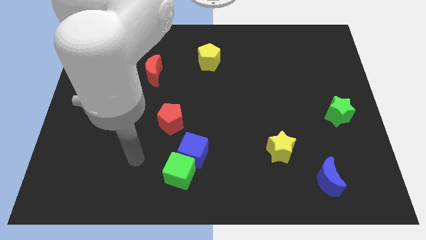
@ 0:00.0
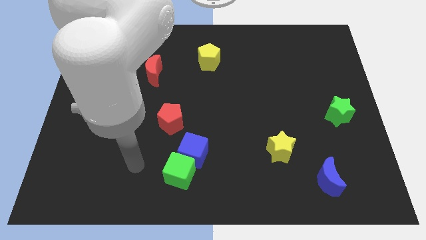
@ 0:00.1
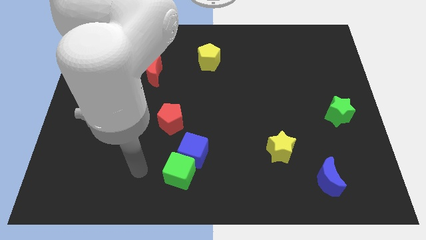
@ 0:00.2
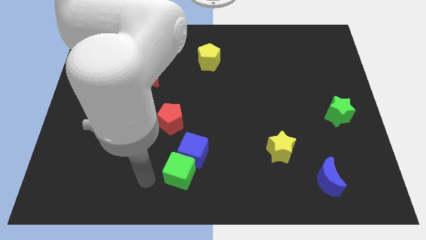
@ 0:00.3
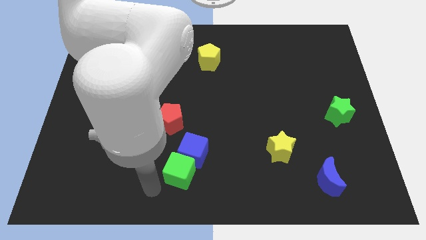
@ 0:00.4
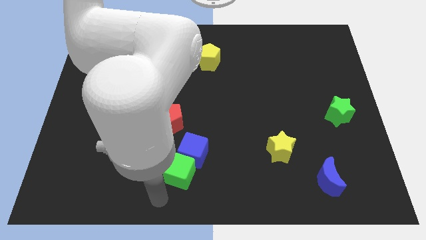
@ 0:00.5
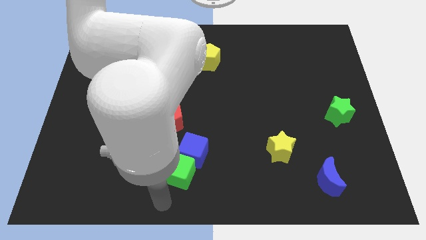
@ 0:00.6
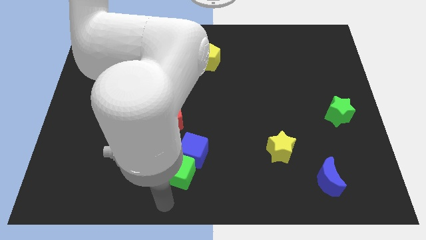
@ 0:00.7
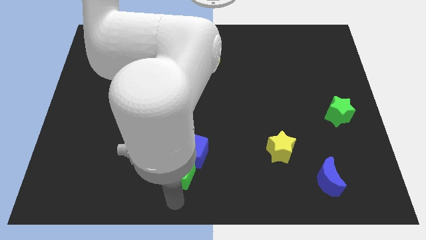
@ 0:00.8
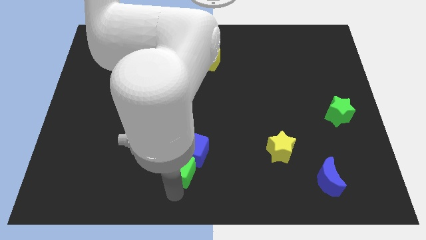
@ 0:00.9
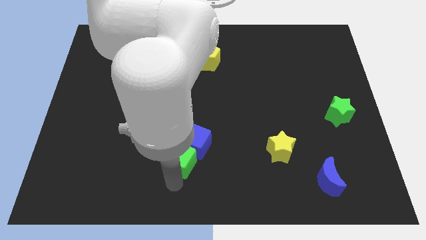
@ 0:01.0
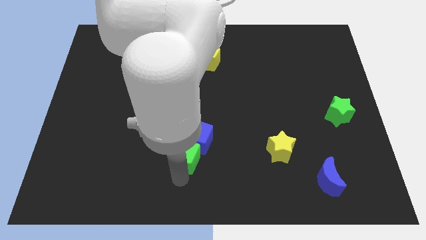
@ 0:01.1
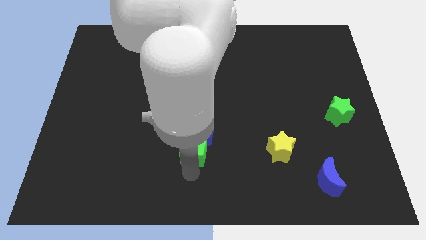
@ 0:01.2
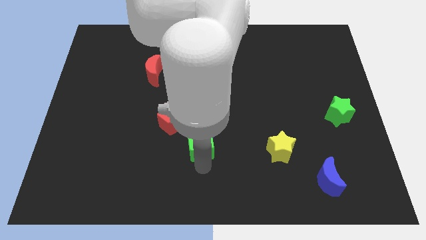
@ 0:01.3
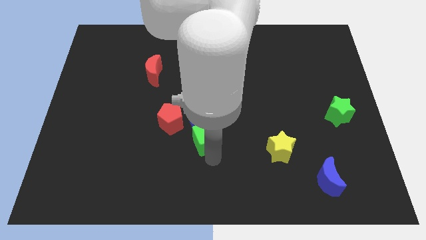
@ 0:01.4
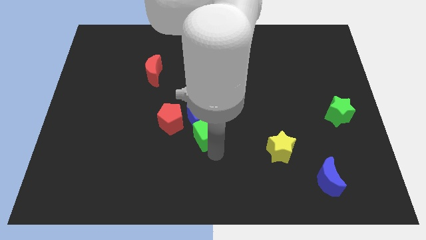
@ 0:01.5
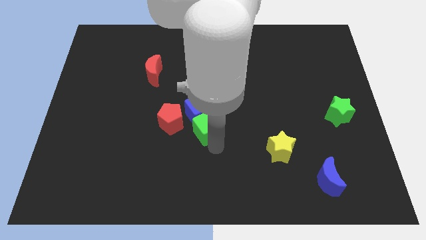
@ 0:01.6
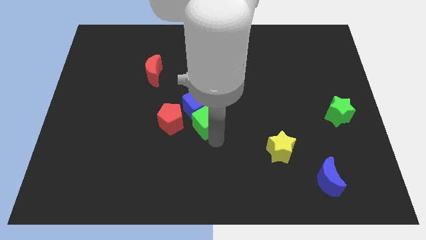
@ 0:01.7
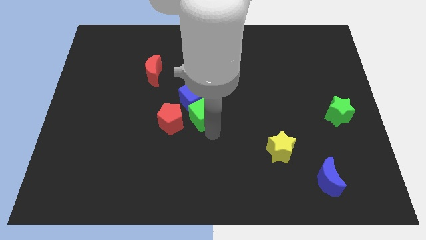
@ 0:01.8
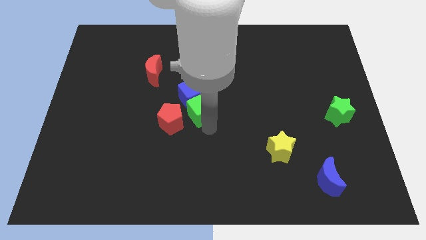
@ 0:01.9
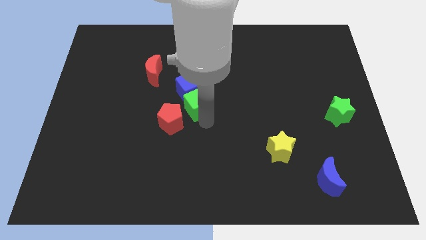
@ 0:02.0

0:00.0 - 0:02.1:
push the green cube close to the red pentagon

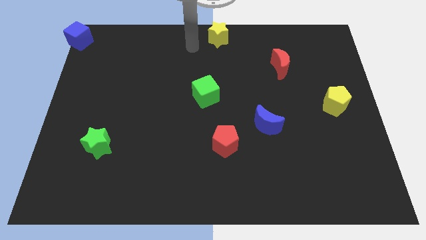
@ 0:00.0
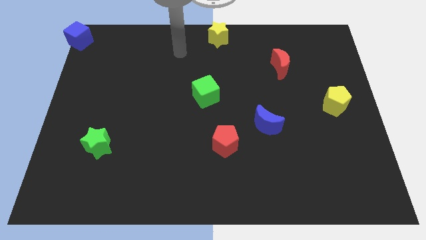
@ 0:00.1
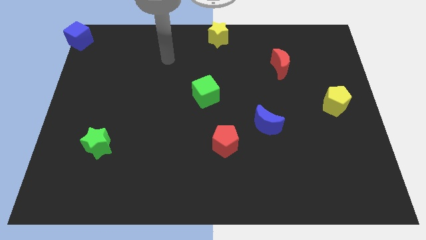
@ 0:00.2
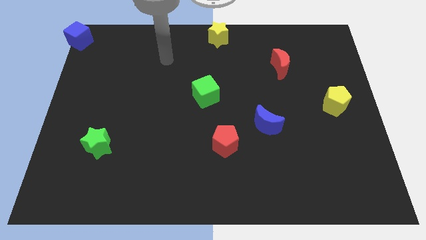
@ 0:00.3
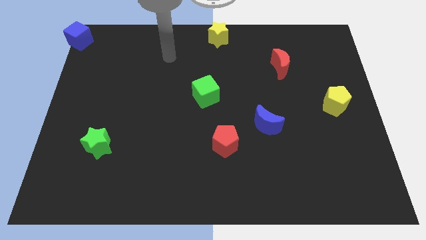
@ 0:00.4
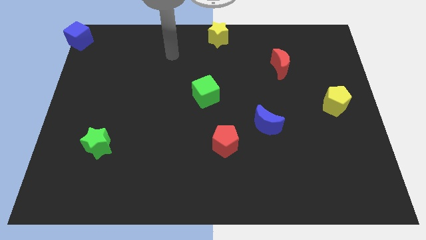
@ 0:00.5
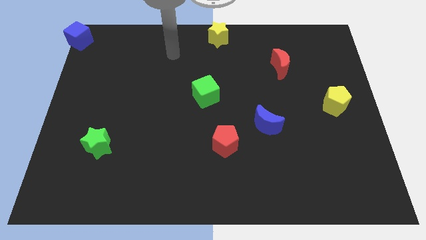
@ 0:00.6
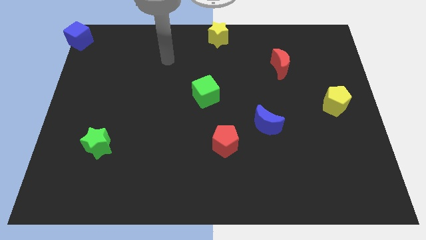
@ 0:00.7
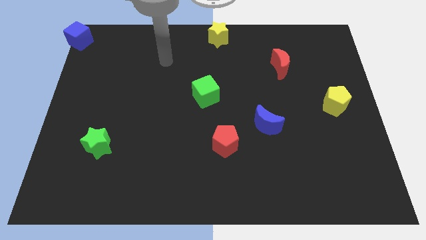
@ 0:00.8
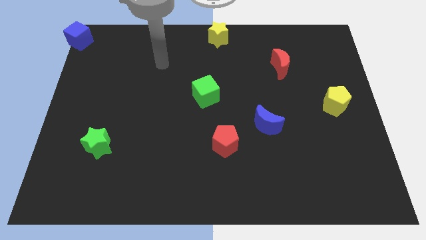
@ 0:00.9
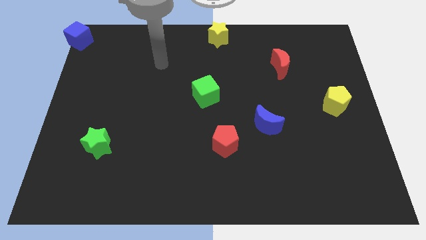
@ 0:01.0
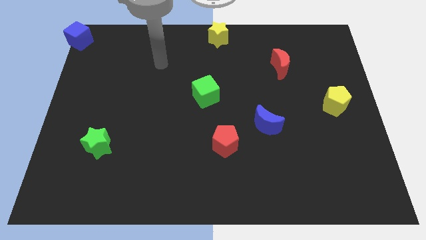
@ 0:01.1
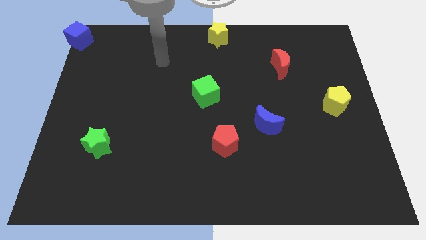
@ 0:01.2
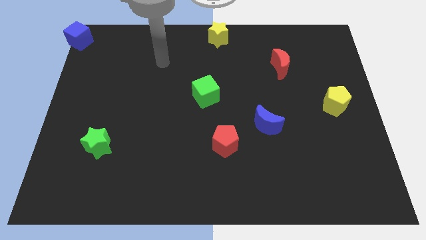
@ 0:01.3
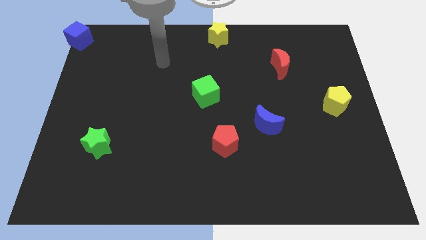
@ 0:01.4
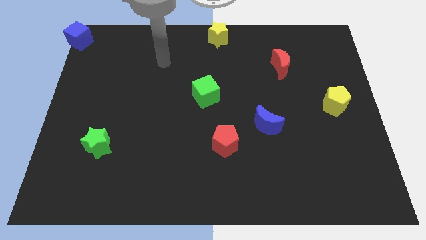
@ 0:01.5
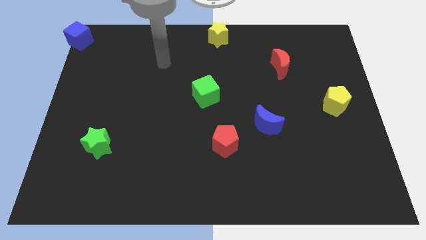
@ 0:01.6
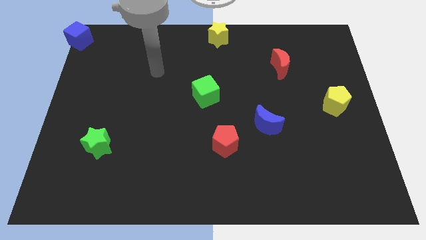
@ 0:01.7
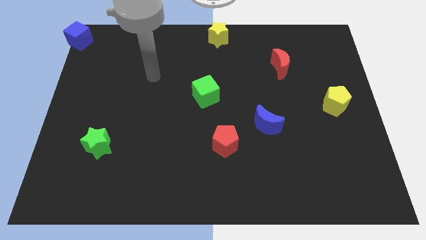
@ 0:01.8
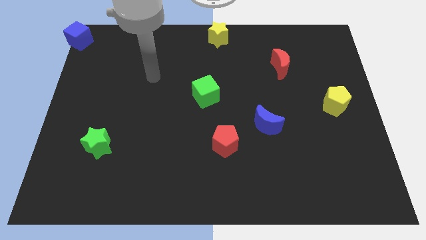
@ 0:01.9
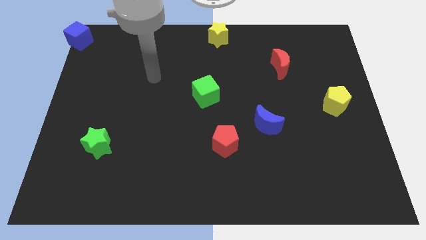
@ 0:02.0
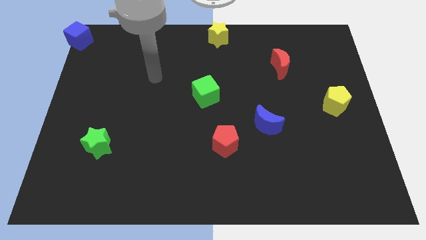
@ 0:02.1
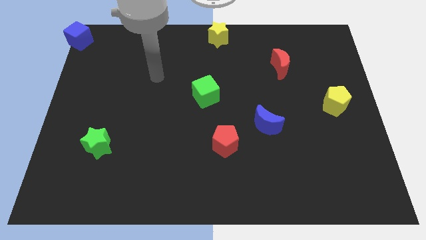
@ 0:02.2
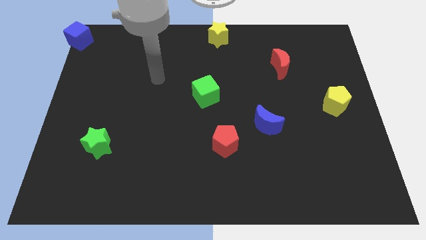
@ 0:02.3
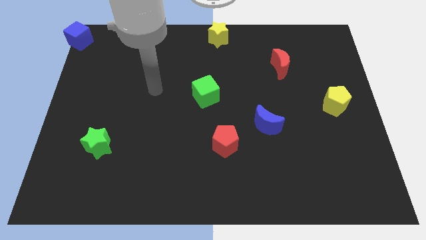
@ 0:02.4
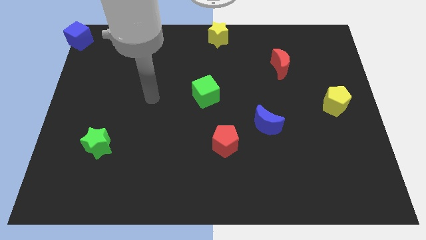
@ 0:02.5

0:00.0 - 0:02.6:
point your arm at the left of the green cube

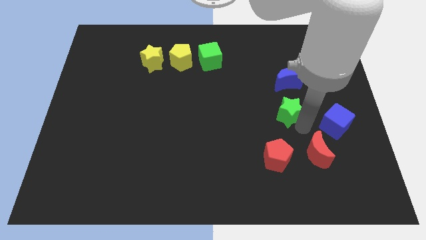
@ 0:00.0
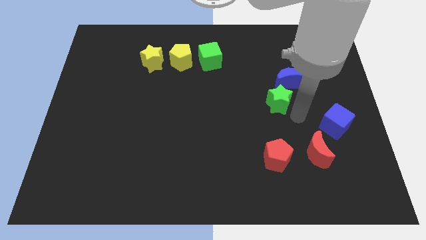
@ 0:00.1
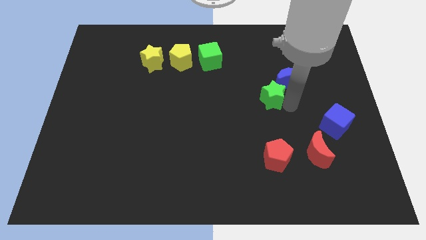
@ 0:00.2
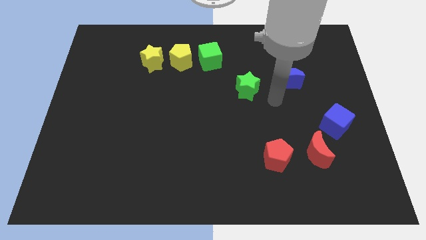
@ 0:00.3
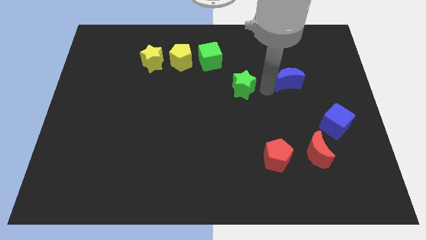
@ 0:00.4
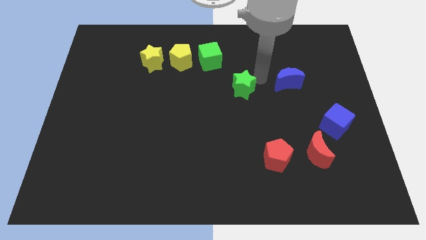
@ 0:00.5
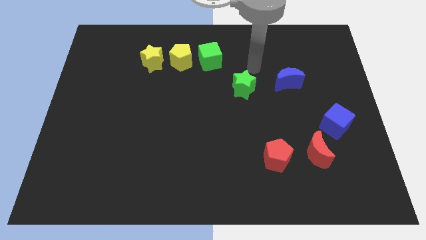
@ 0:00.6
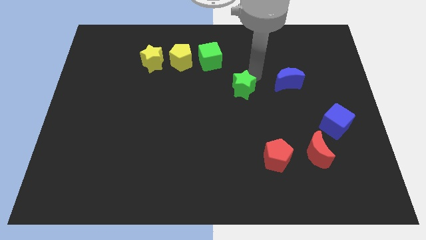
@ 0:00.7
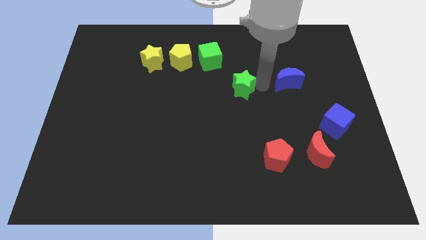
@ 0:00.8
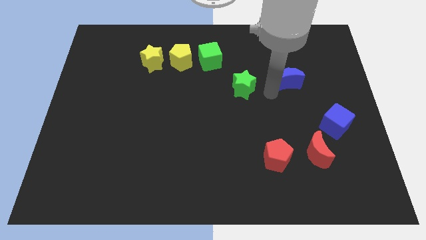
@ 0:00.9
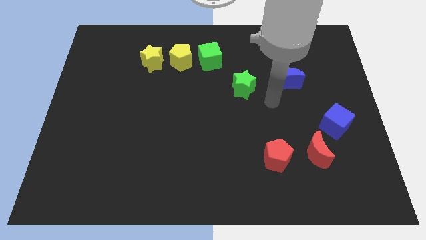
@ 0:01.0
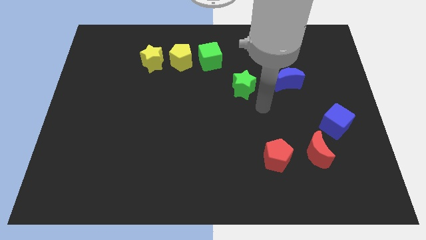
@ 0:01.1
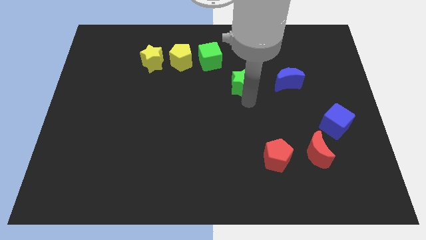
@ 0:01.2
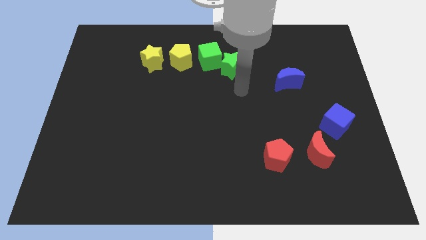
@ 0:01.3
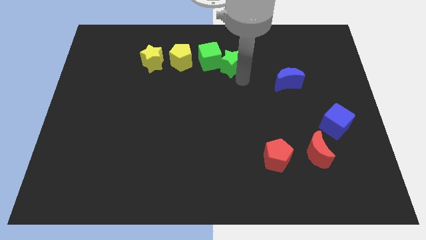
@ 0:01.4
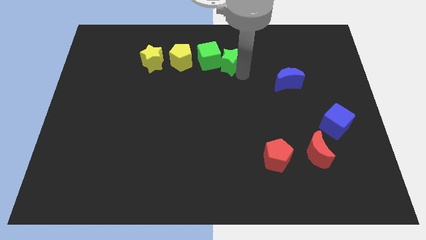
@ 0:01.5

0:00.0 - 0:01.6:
push the green star towards the green cube

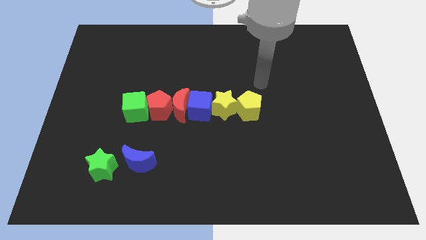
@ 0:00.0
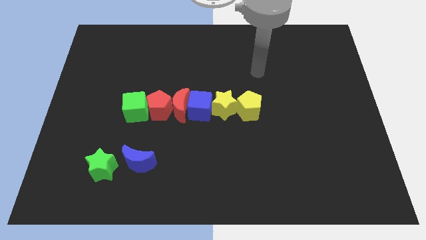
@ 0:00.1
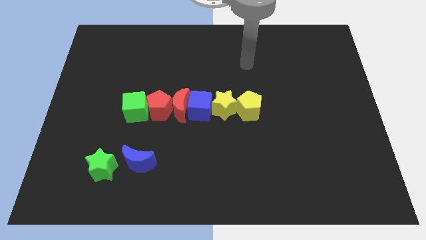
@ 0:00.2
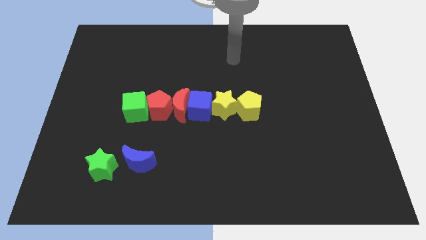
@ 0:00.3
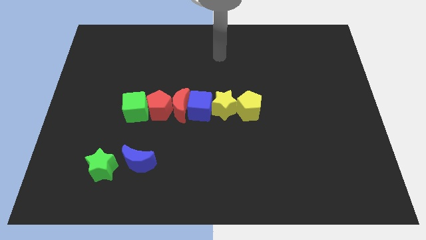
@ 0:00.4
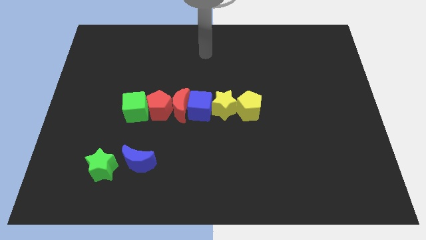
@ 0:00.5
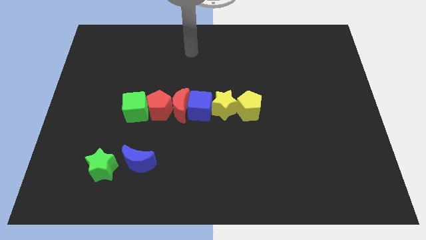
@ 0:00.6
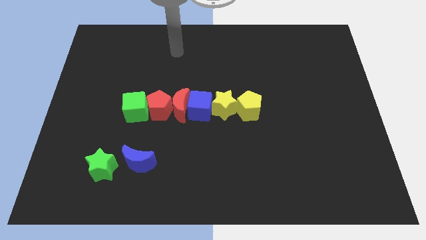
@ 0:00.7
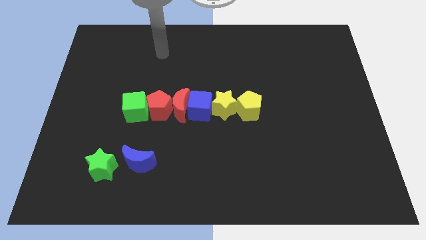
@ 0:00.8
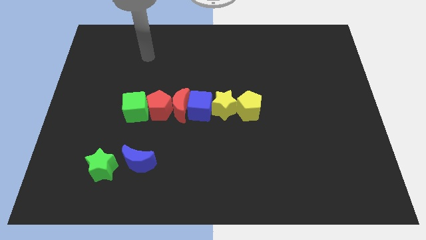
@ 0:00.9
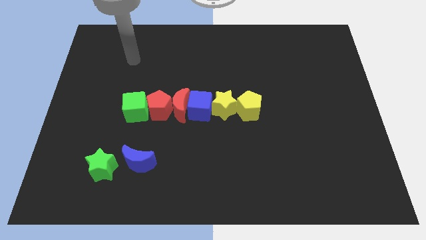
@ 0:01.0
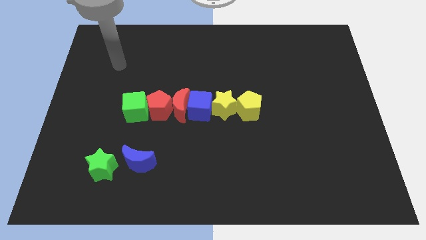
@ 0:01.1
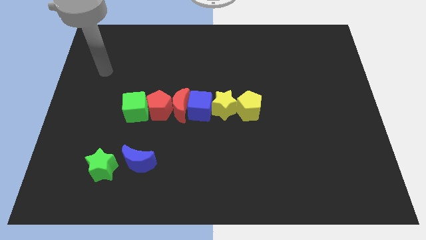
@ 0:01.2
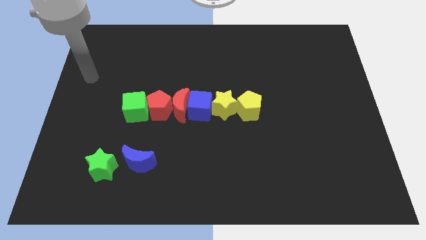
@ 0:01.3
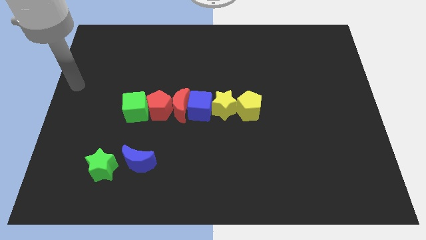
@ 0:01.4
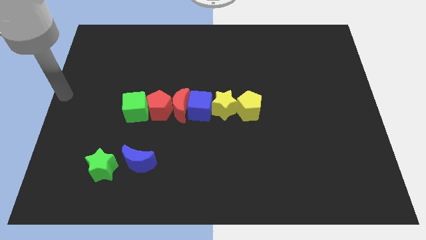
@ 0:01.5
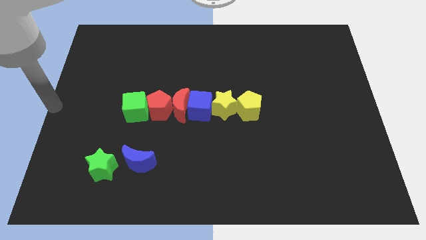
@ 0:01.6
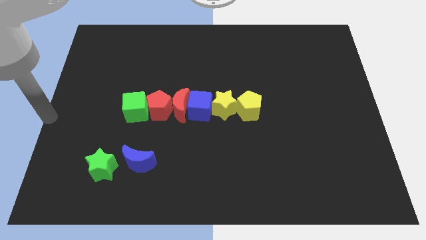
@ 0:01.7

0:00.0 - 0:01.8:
point your arm at the left center of the board

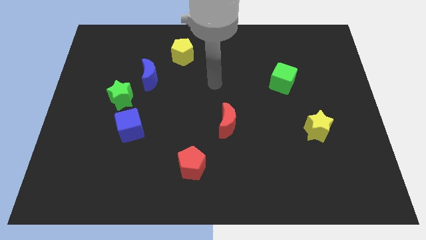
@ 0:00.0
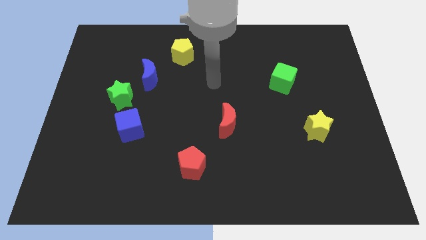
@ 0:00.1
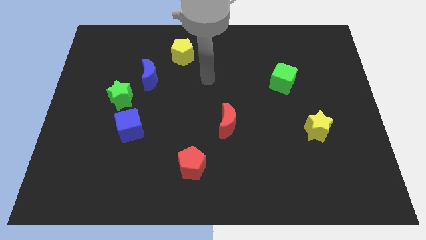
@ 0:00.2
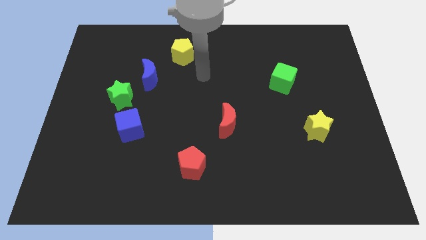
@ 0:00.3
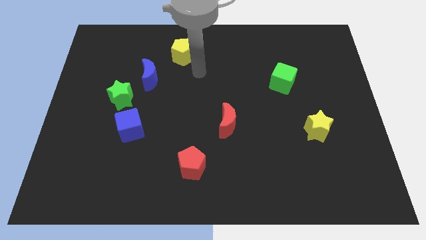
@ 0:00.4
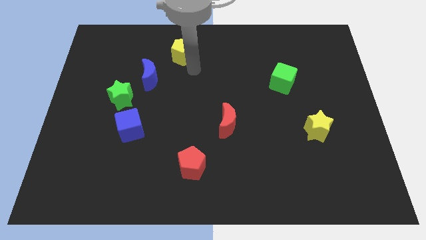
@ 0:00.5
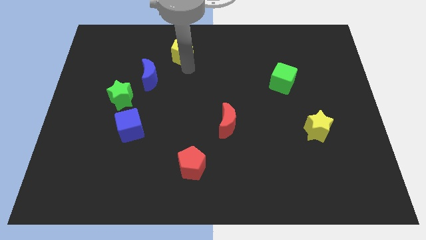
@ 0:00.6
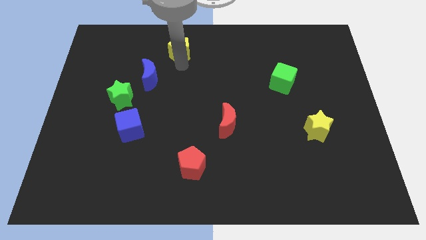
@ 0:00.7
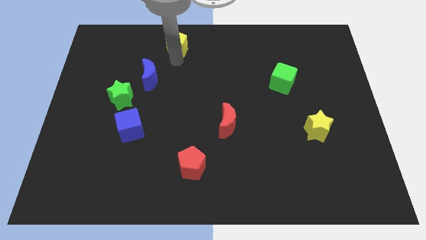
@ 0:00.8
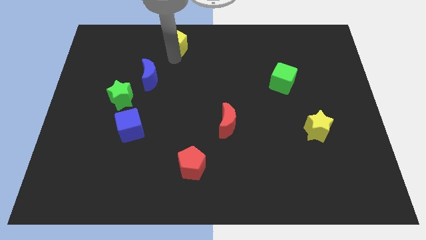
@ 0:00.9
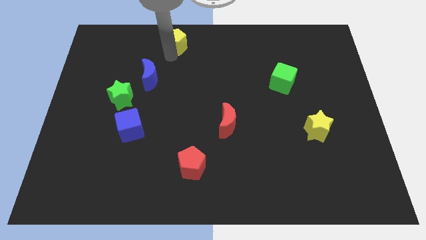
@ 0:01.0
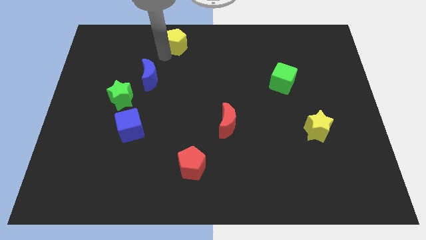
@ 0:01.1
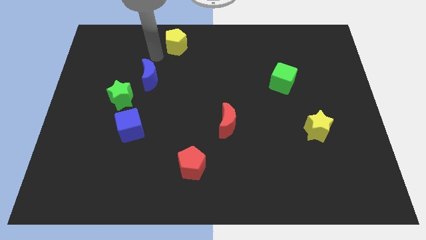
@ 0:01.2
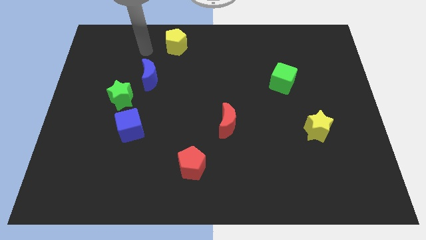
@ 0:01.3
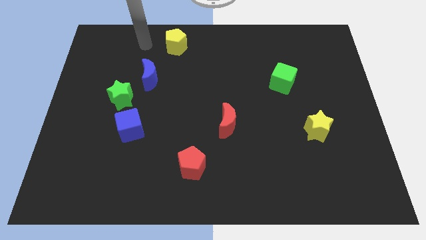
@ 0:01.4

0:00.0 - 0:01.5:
move the yellow pentagon towards the top center
